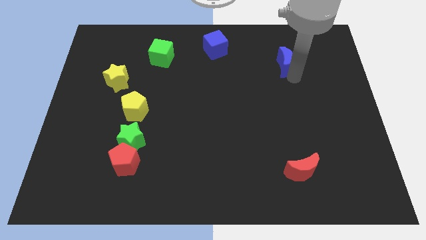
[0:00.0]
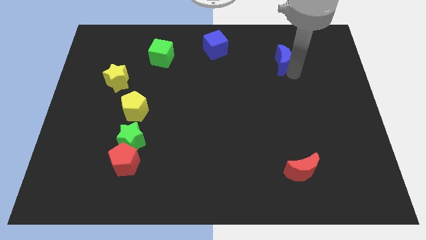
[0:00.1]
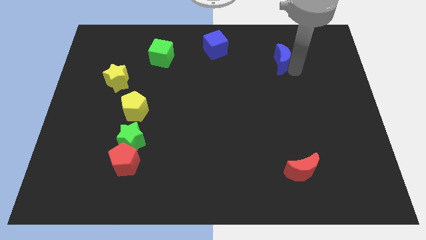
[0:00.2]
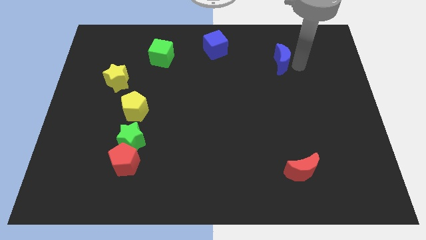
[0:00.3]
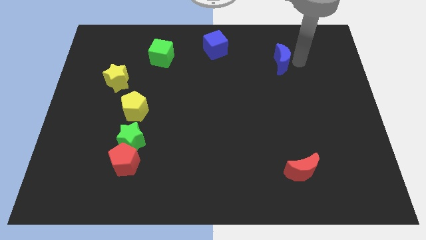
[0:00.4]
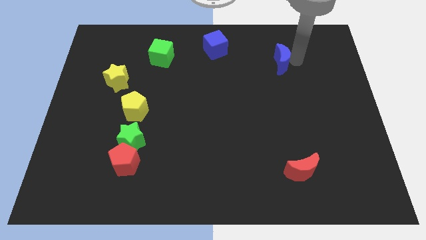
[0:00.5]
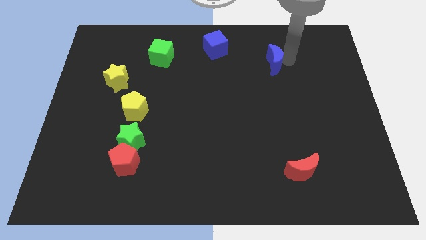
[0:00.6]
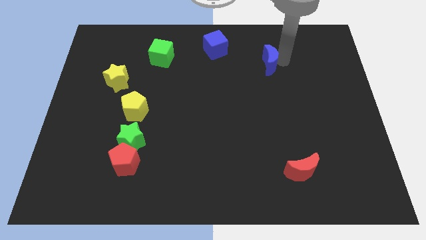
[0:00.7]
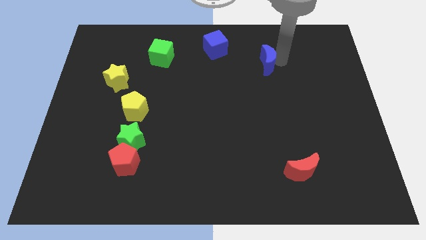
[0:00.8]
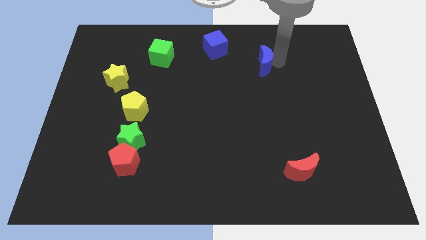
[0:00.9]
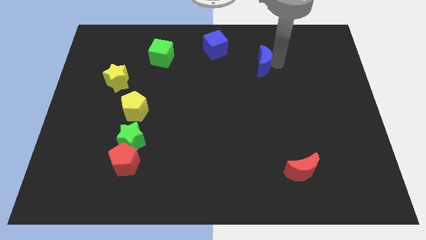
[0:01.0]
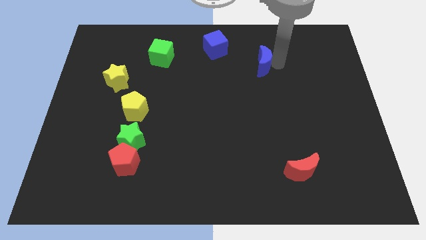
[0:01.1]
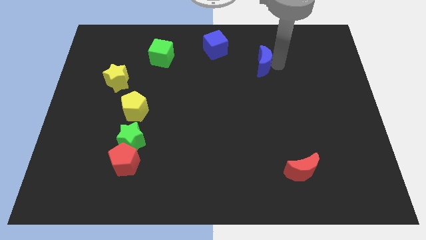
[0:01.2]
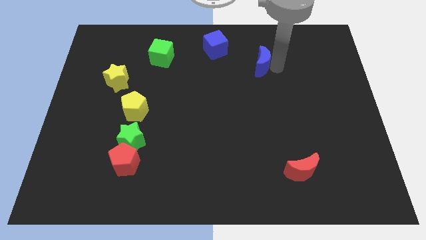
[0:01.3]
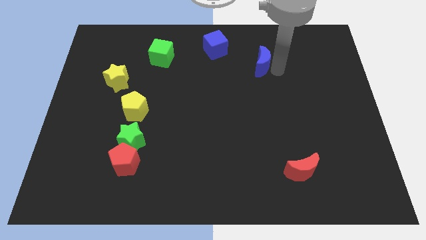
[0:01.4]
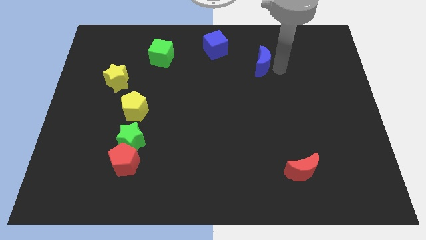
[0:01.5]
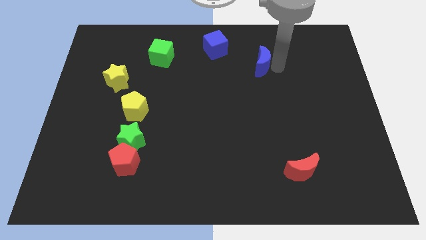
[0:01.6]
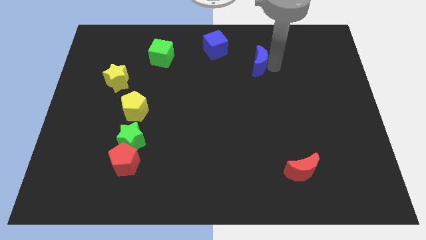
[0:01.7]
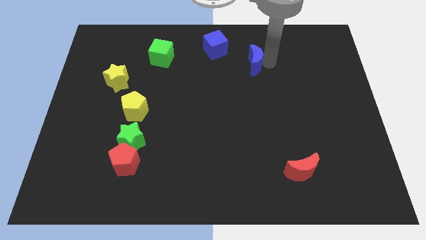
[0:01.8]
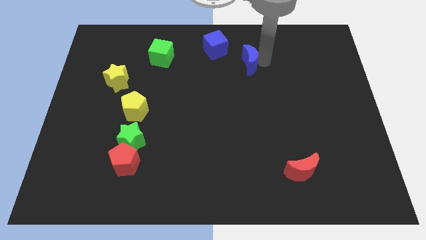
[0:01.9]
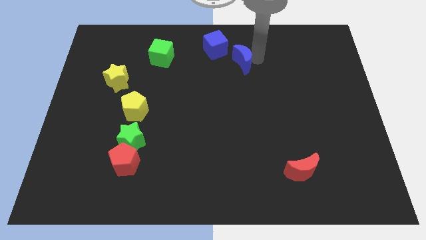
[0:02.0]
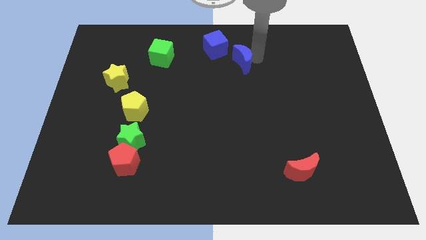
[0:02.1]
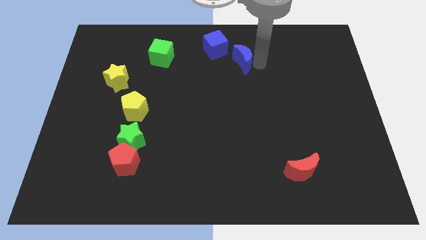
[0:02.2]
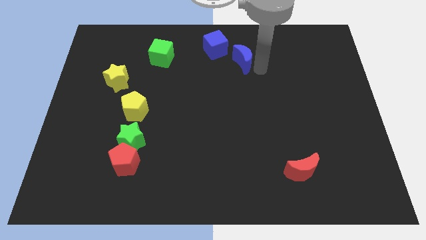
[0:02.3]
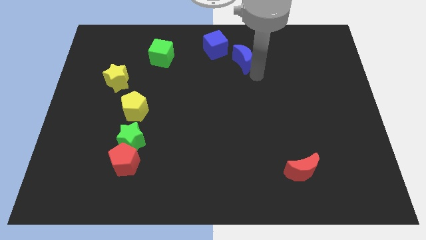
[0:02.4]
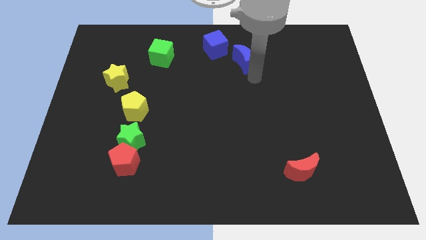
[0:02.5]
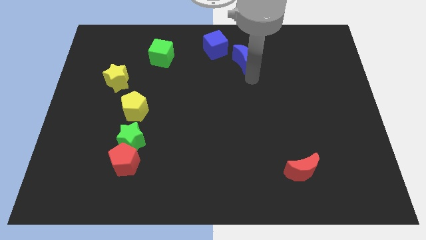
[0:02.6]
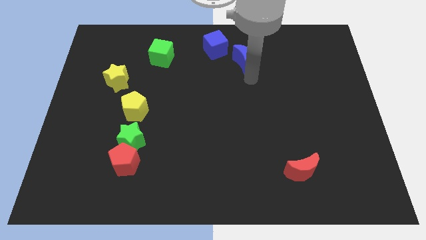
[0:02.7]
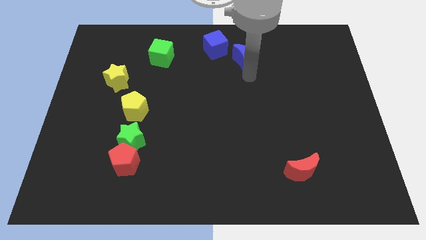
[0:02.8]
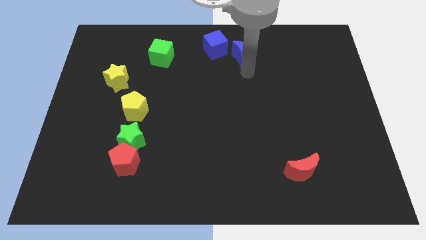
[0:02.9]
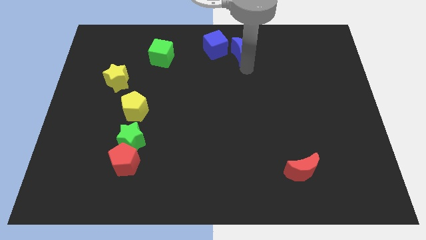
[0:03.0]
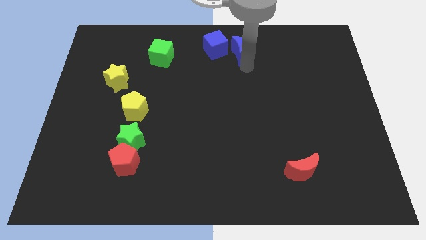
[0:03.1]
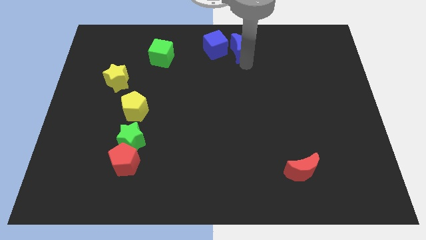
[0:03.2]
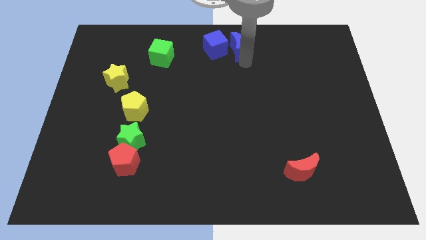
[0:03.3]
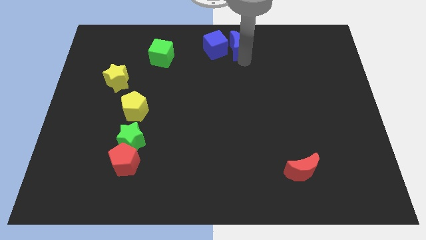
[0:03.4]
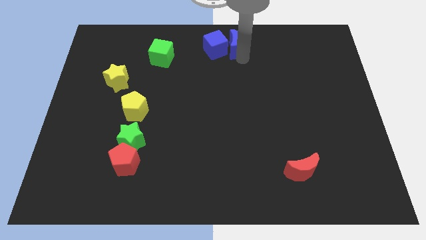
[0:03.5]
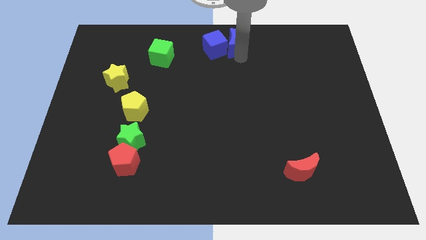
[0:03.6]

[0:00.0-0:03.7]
place the blue moon right to the blue square

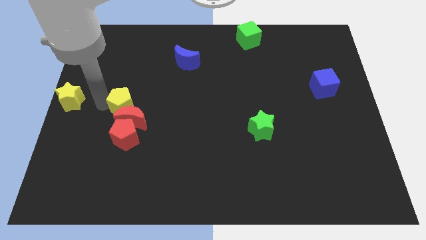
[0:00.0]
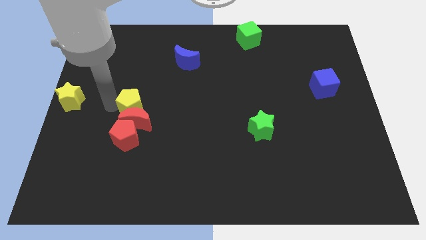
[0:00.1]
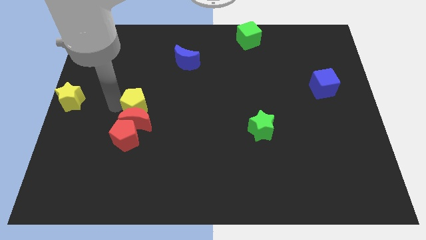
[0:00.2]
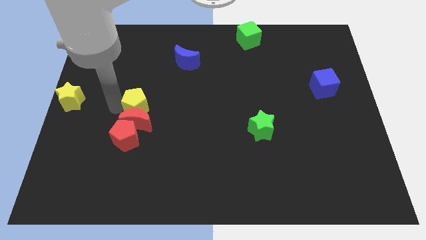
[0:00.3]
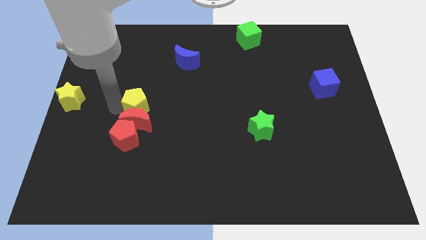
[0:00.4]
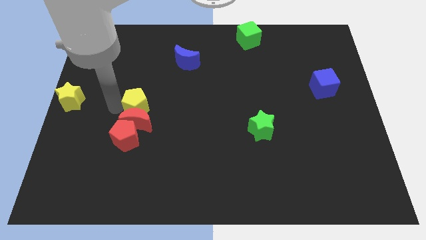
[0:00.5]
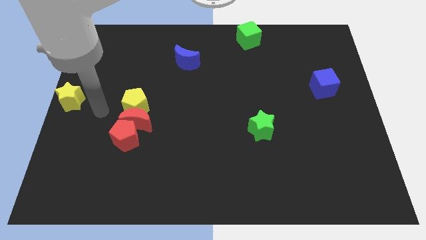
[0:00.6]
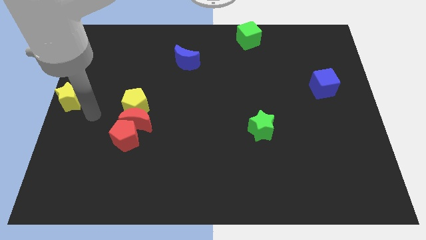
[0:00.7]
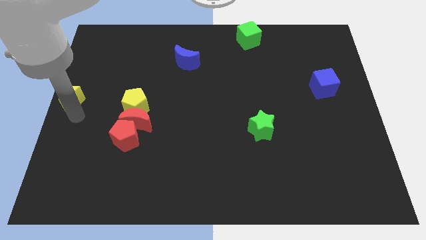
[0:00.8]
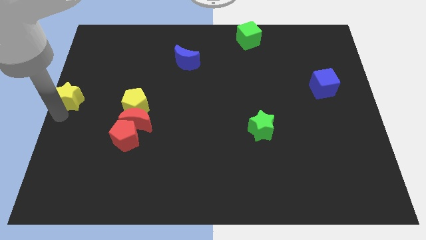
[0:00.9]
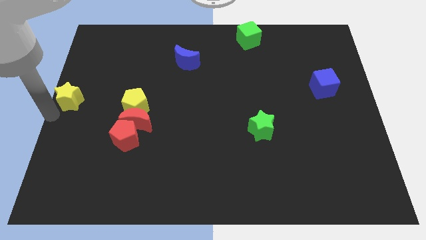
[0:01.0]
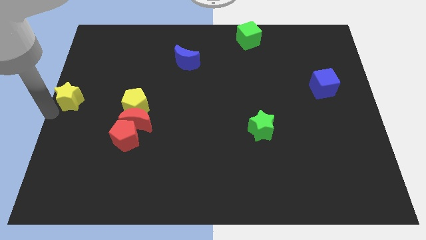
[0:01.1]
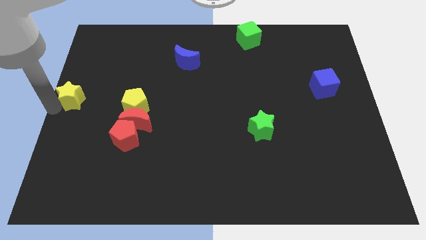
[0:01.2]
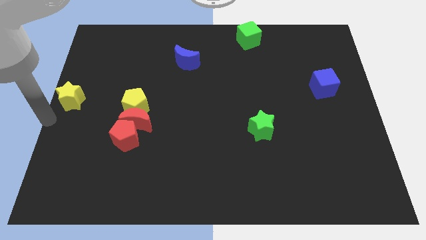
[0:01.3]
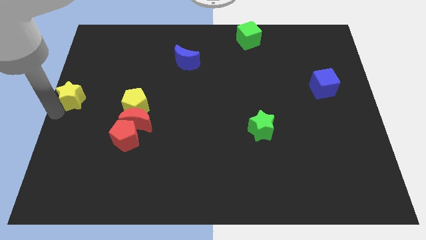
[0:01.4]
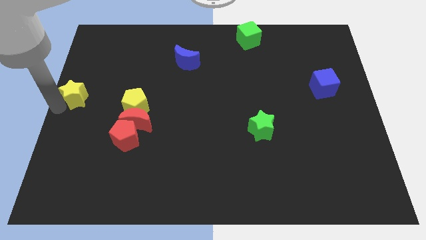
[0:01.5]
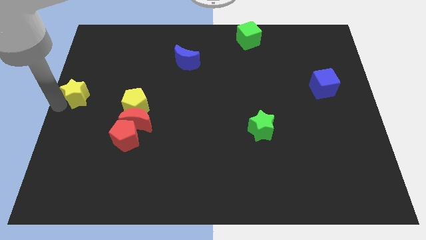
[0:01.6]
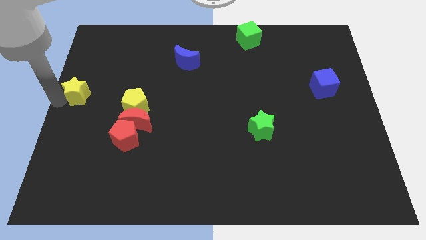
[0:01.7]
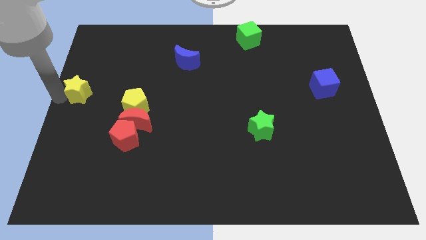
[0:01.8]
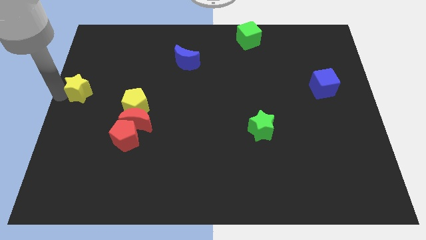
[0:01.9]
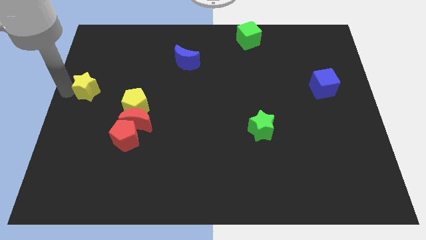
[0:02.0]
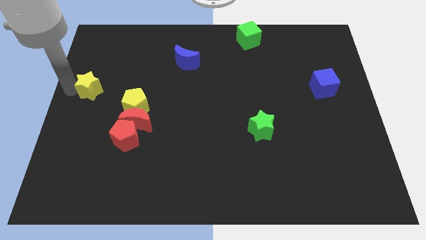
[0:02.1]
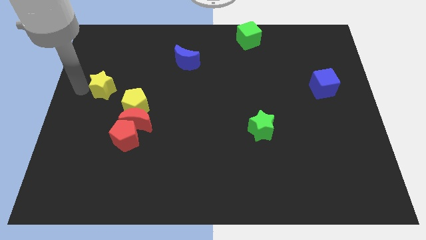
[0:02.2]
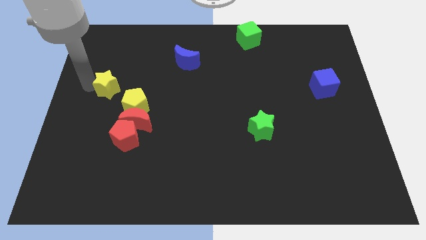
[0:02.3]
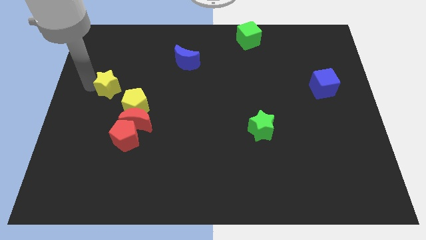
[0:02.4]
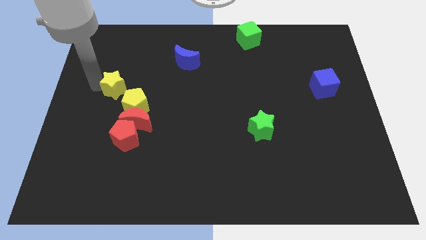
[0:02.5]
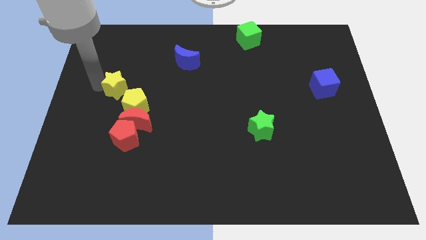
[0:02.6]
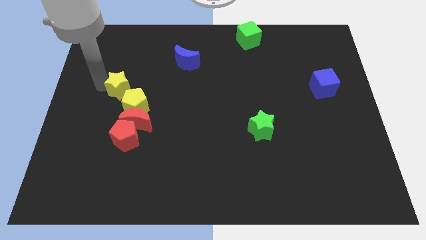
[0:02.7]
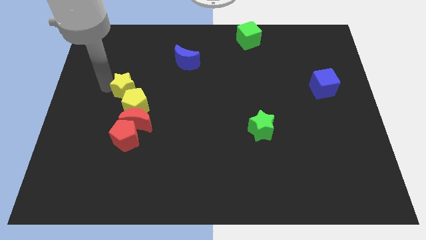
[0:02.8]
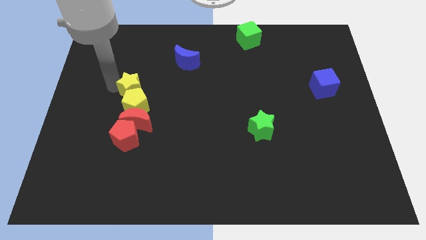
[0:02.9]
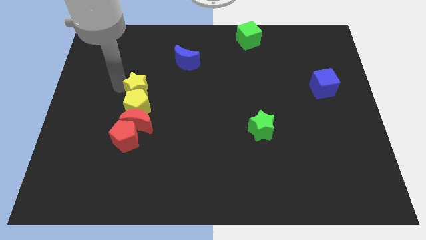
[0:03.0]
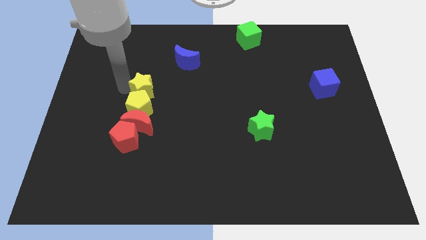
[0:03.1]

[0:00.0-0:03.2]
arrange the yellow star on the top of the yellow pentagon

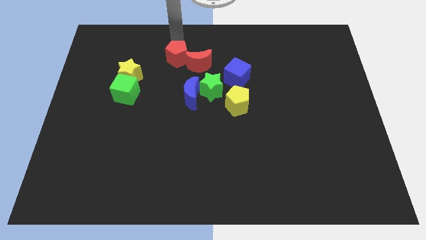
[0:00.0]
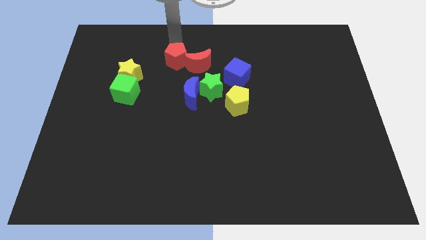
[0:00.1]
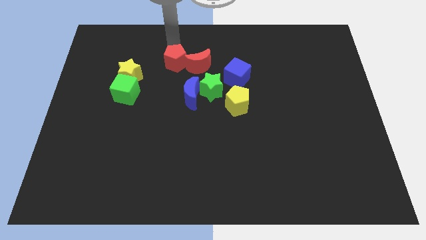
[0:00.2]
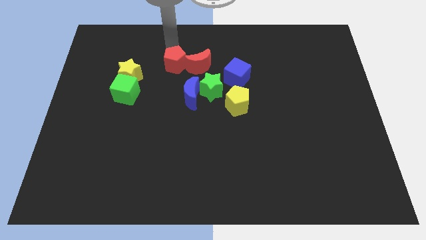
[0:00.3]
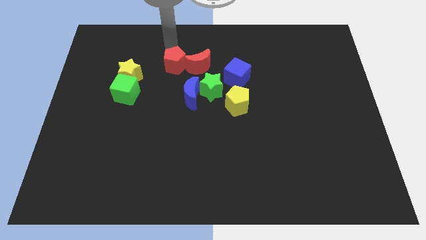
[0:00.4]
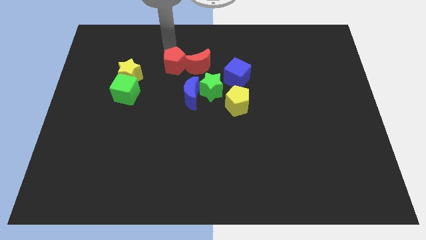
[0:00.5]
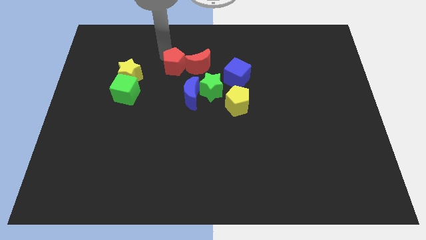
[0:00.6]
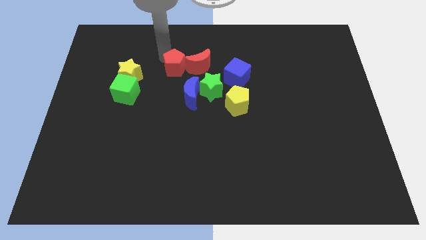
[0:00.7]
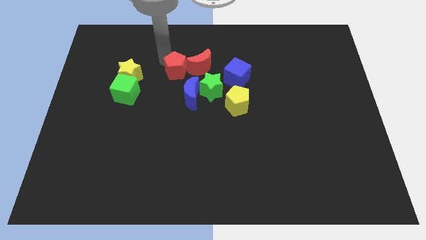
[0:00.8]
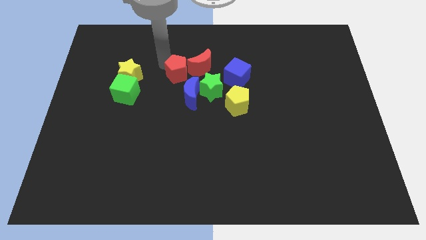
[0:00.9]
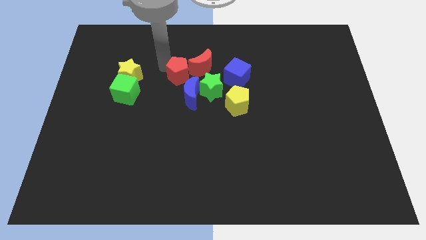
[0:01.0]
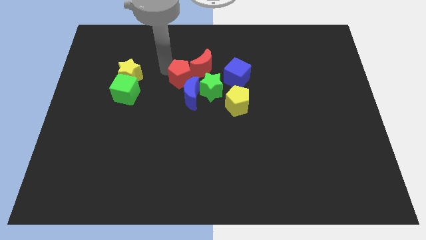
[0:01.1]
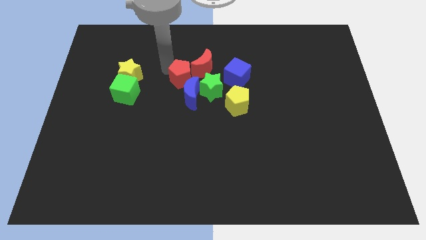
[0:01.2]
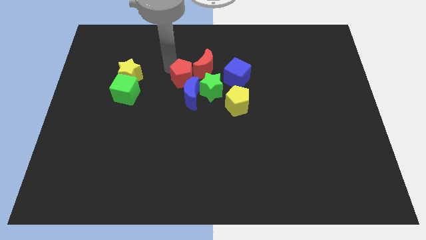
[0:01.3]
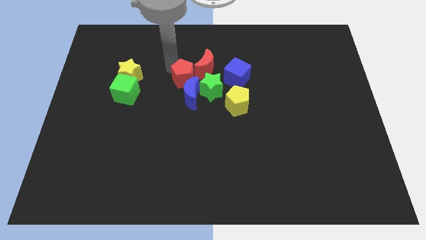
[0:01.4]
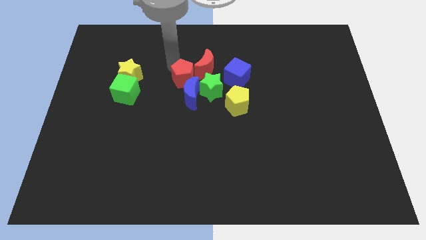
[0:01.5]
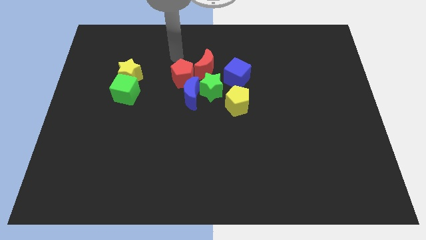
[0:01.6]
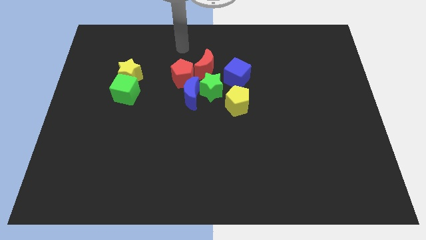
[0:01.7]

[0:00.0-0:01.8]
make the red pentagon touch the blue crescent

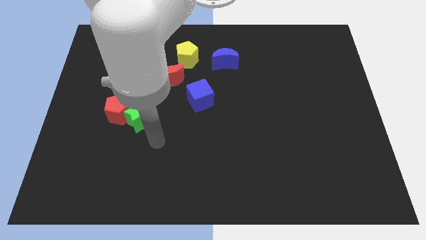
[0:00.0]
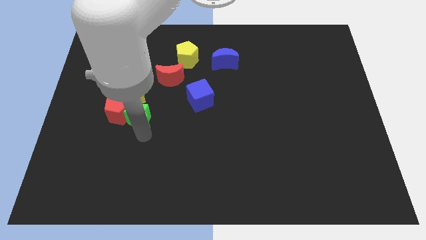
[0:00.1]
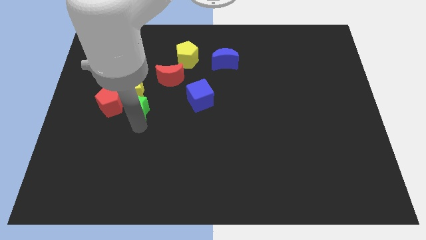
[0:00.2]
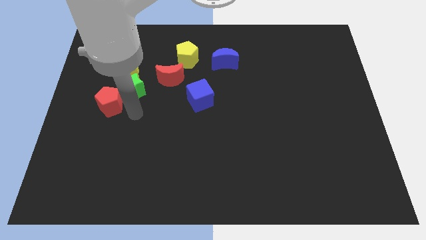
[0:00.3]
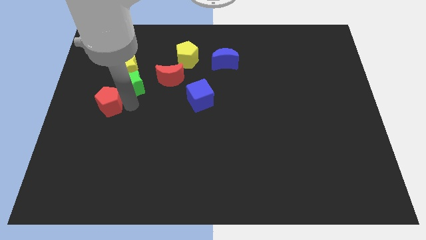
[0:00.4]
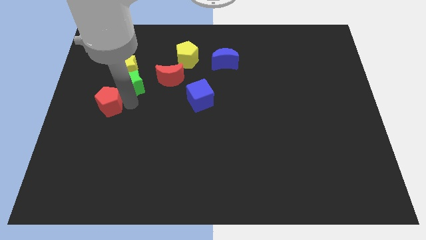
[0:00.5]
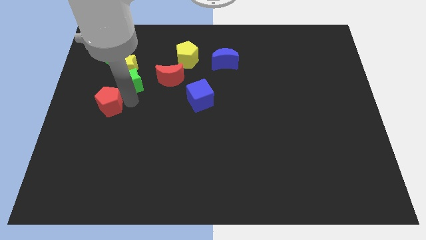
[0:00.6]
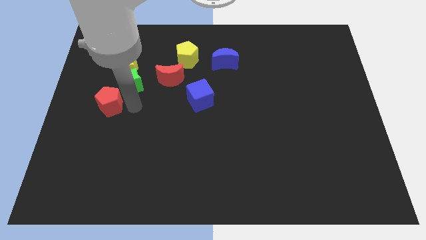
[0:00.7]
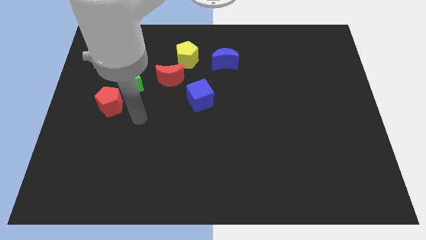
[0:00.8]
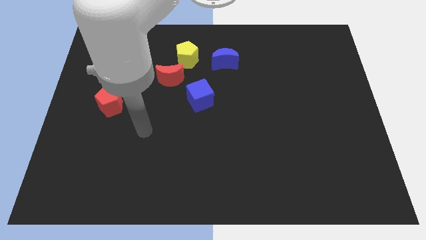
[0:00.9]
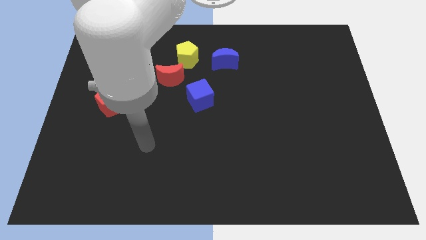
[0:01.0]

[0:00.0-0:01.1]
push the green star to the bottom of the yellow star on the board
